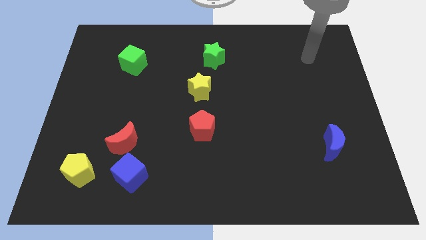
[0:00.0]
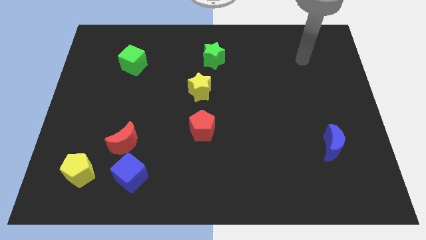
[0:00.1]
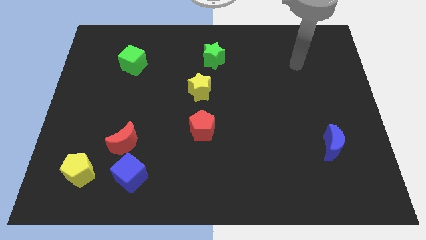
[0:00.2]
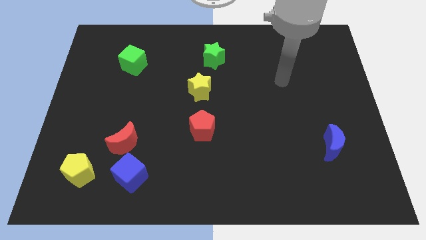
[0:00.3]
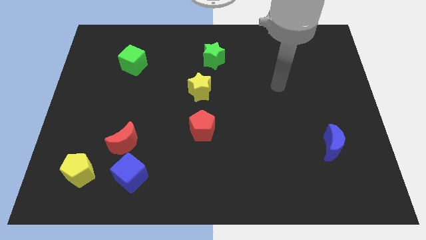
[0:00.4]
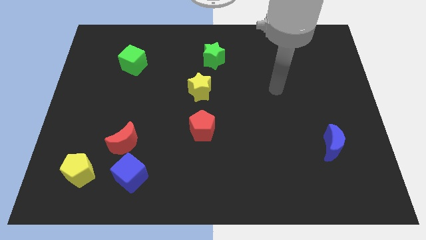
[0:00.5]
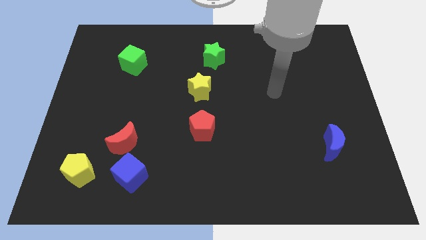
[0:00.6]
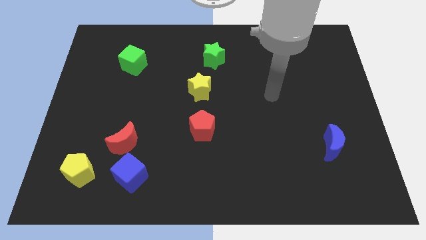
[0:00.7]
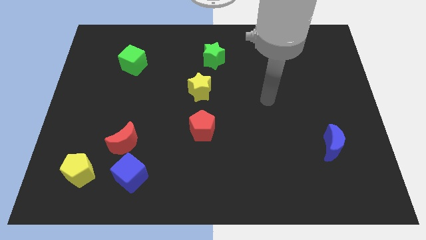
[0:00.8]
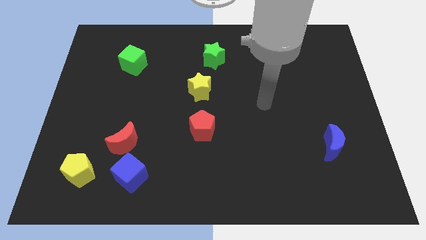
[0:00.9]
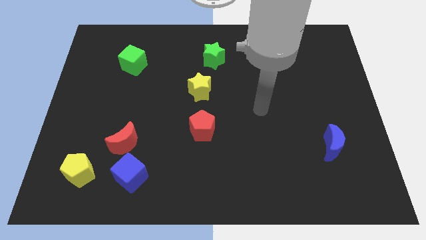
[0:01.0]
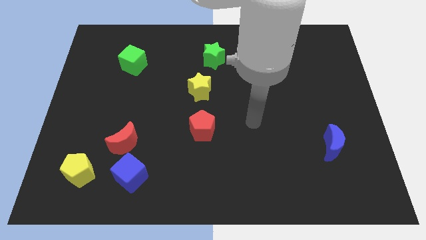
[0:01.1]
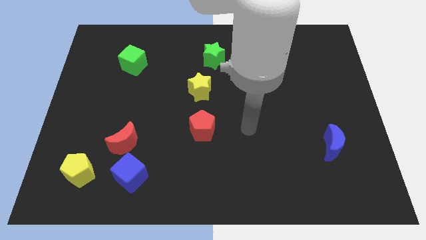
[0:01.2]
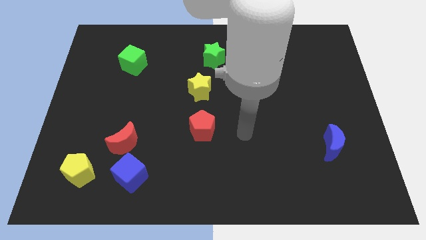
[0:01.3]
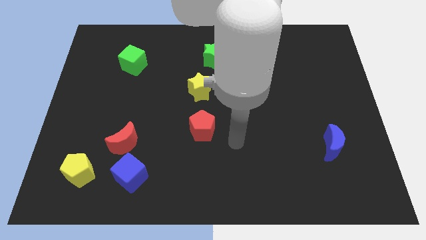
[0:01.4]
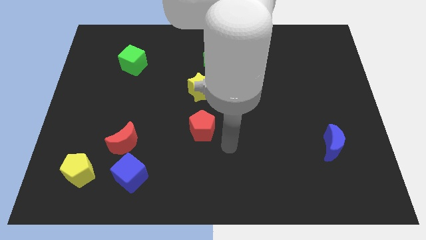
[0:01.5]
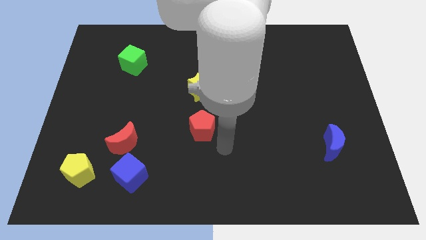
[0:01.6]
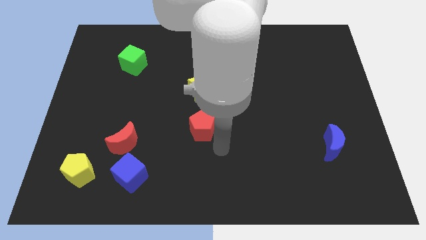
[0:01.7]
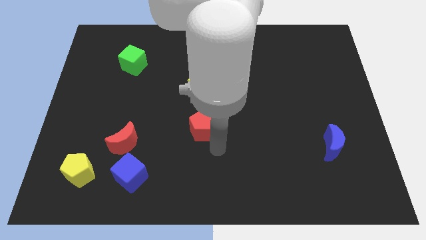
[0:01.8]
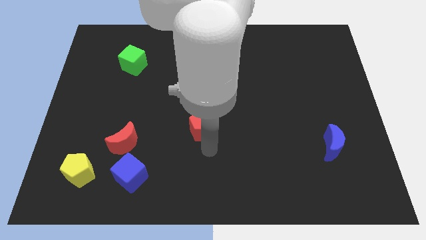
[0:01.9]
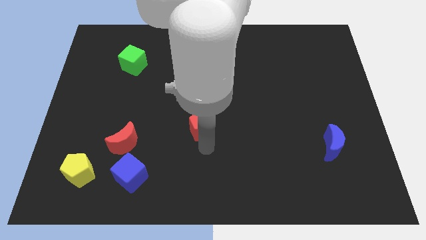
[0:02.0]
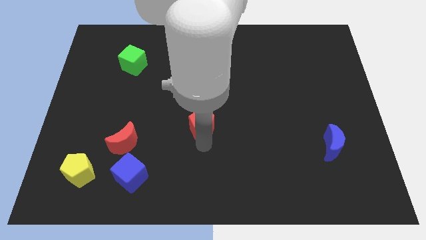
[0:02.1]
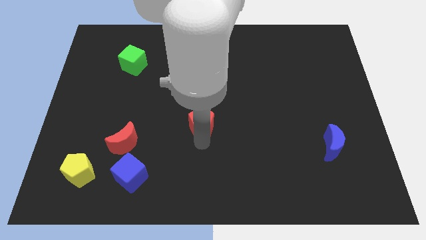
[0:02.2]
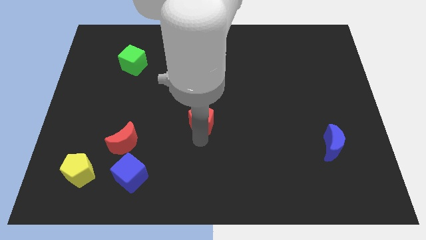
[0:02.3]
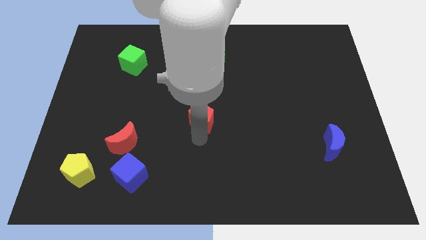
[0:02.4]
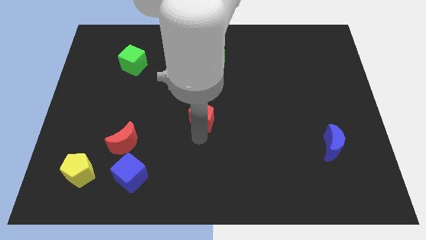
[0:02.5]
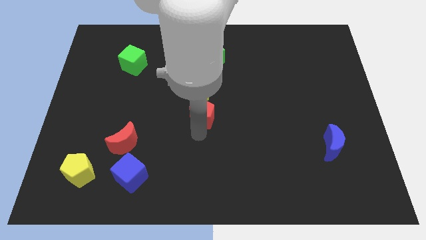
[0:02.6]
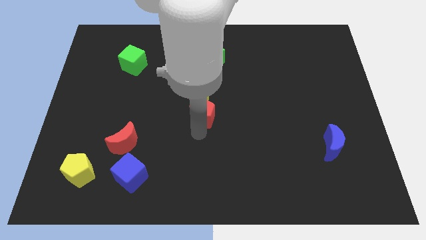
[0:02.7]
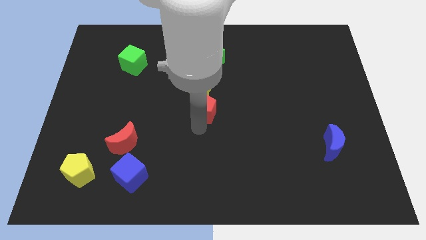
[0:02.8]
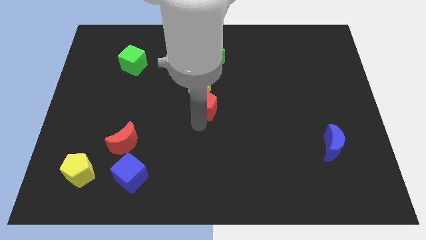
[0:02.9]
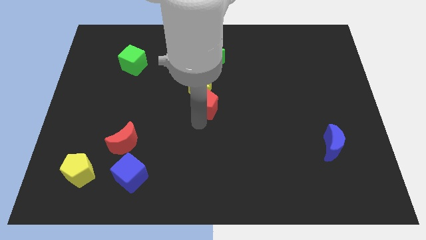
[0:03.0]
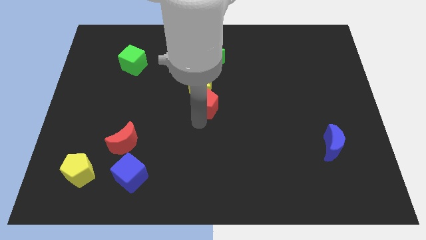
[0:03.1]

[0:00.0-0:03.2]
push the red pentagon next to the yellow star

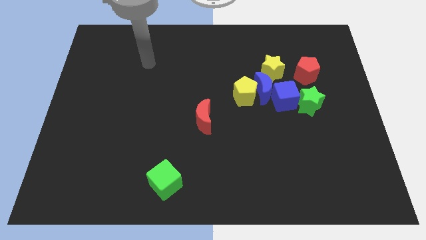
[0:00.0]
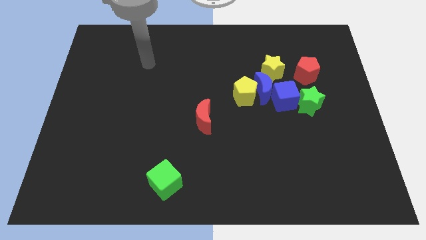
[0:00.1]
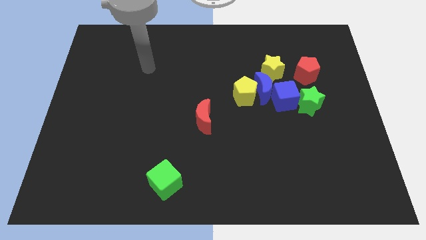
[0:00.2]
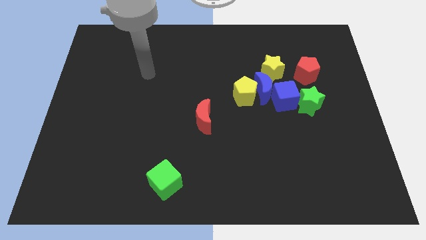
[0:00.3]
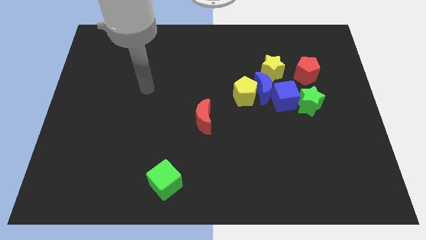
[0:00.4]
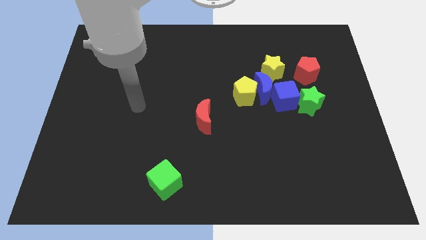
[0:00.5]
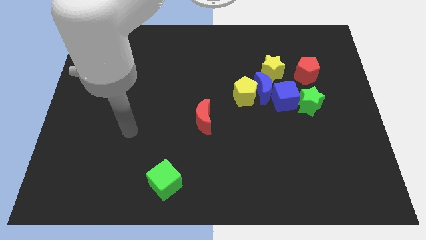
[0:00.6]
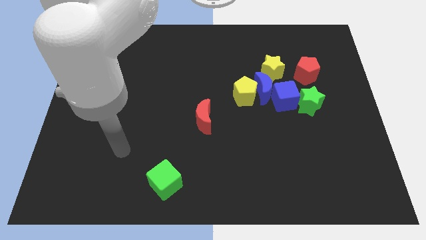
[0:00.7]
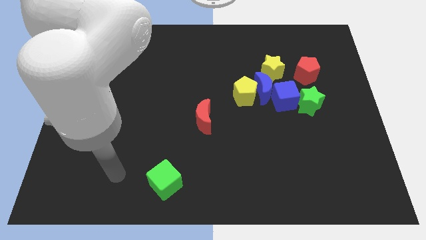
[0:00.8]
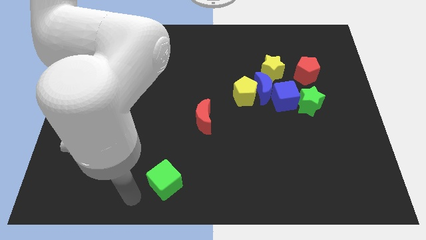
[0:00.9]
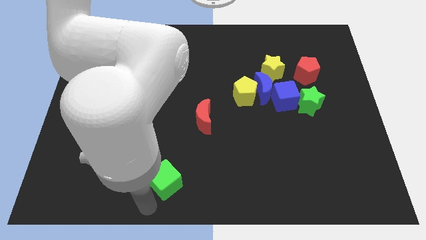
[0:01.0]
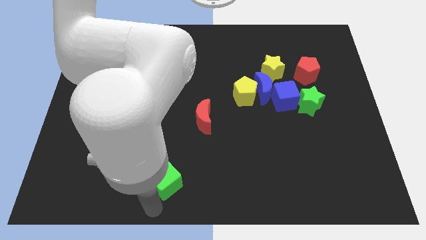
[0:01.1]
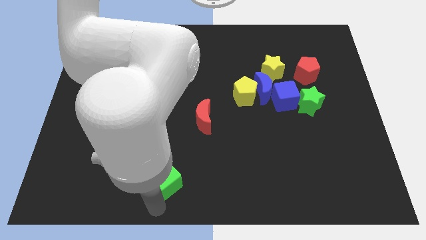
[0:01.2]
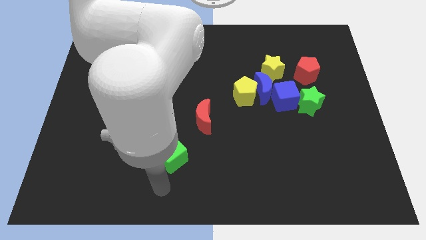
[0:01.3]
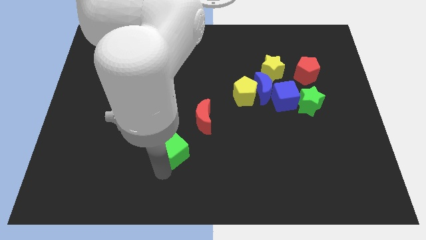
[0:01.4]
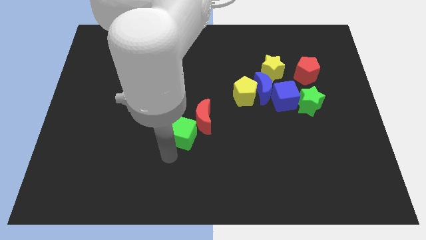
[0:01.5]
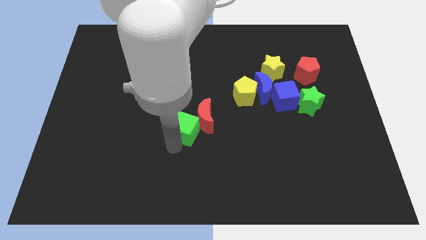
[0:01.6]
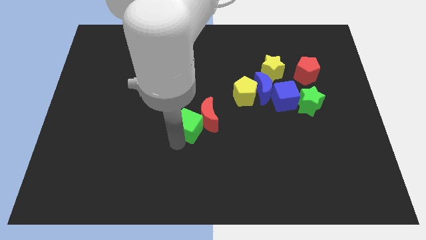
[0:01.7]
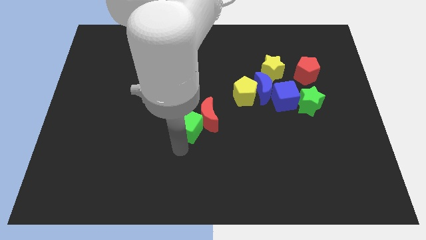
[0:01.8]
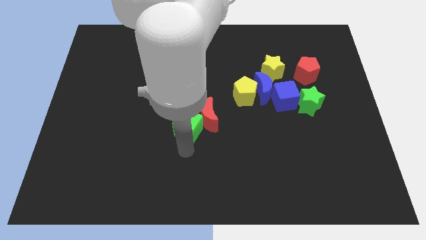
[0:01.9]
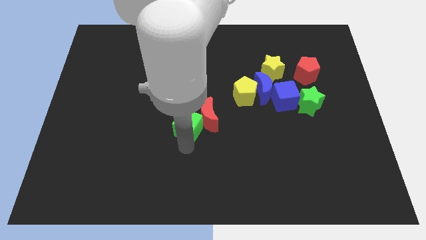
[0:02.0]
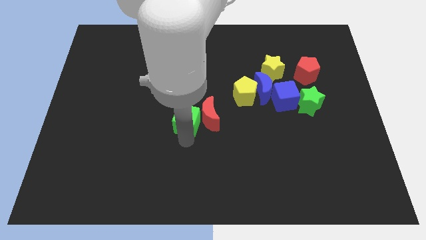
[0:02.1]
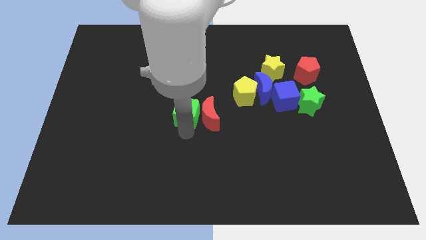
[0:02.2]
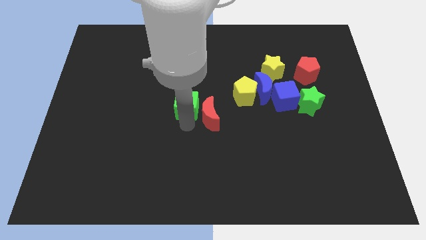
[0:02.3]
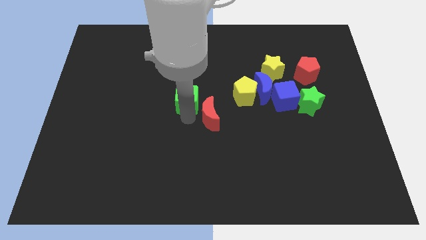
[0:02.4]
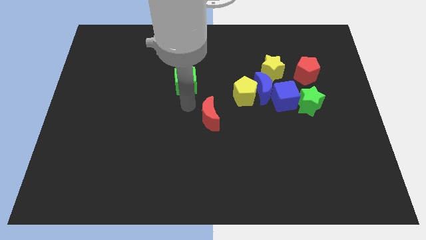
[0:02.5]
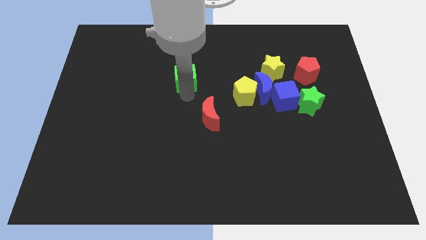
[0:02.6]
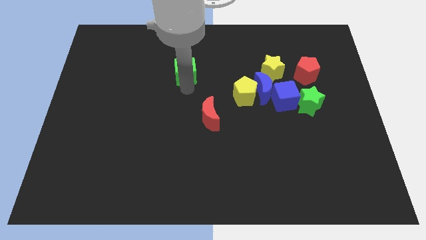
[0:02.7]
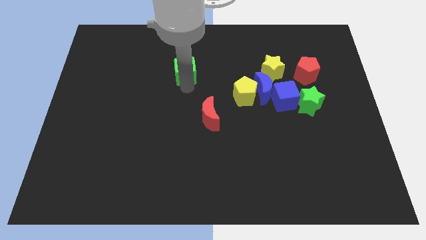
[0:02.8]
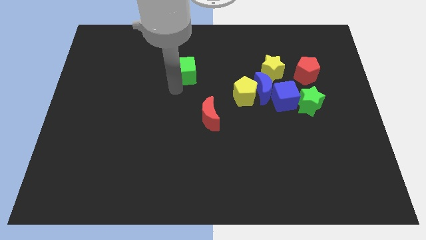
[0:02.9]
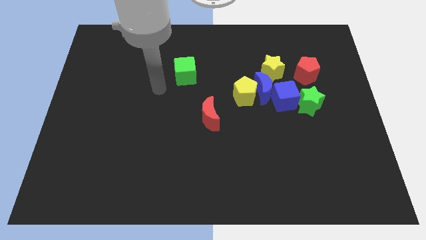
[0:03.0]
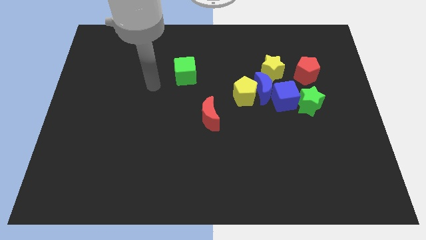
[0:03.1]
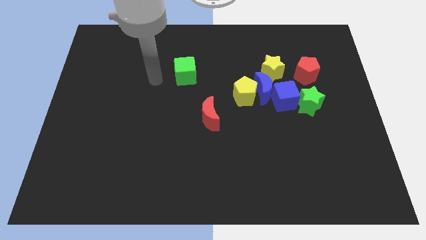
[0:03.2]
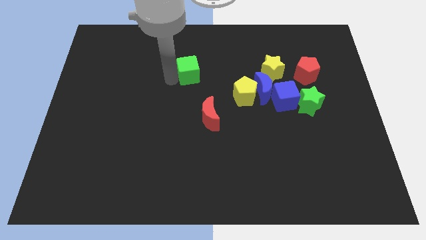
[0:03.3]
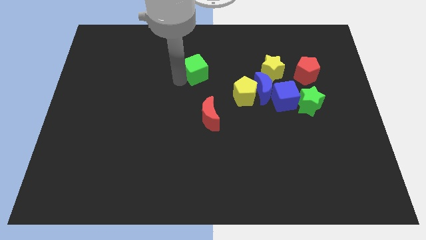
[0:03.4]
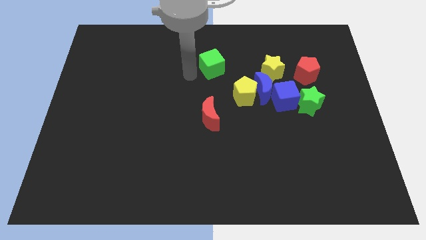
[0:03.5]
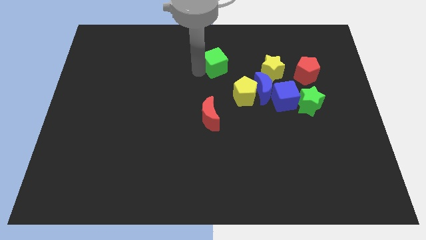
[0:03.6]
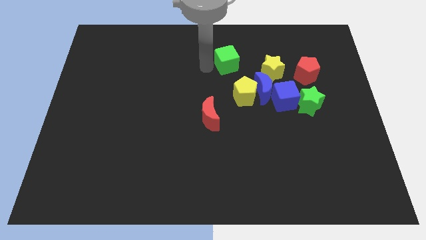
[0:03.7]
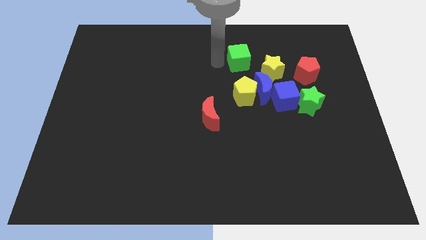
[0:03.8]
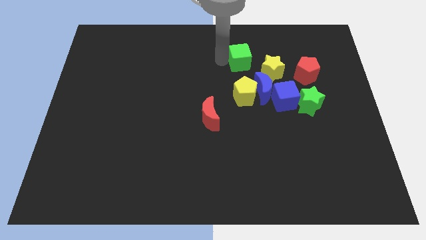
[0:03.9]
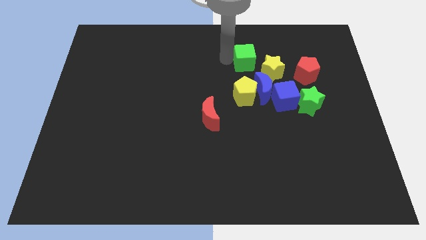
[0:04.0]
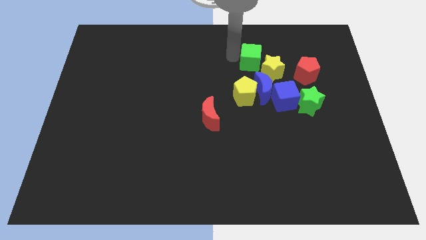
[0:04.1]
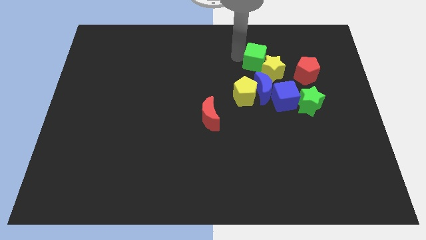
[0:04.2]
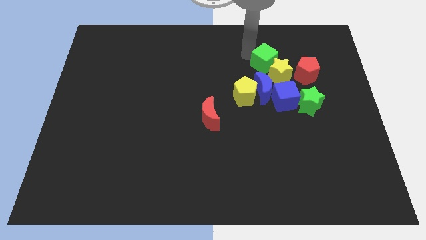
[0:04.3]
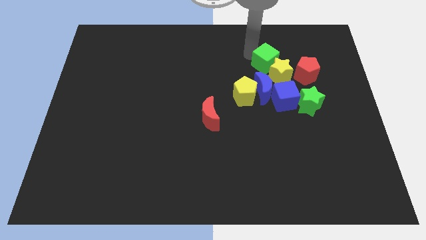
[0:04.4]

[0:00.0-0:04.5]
move the green cube close to the yellow star

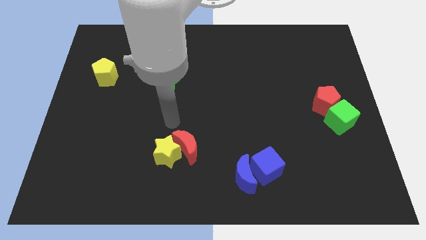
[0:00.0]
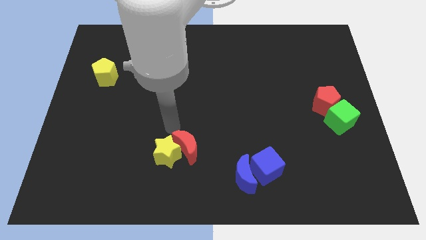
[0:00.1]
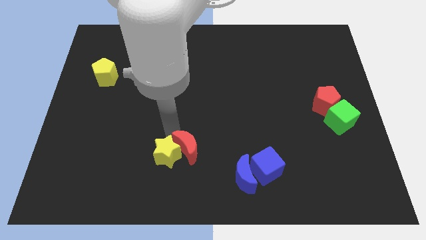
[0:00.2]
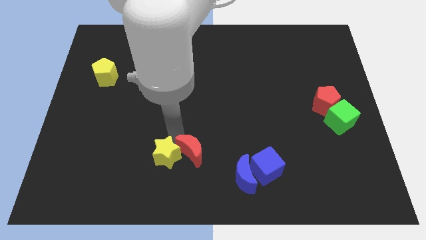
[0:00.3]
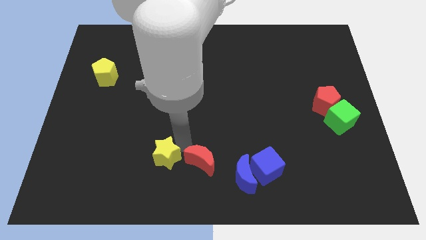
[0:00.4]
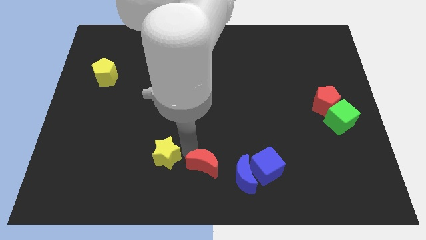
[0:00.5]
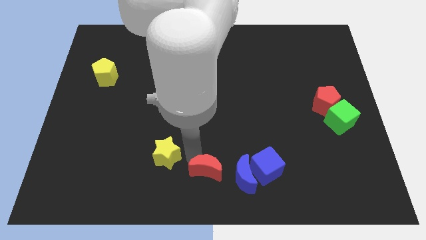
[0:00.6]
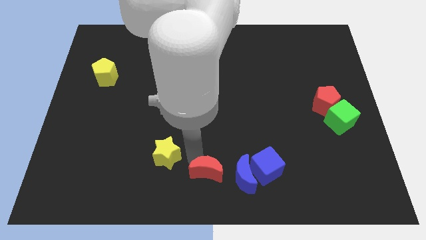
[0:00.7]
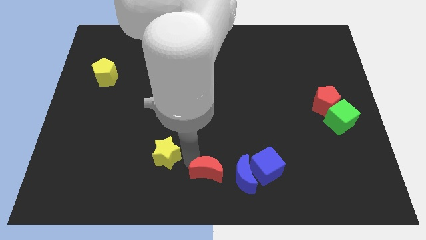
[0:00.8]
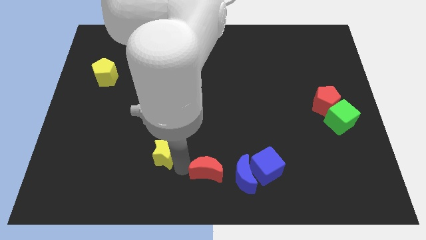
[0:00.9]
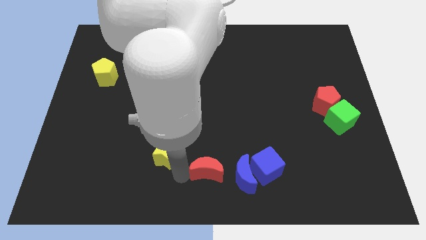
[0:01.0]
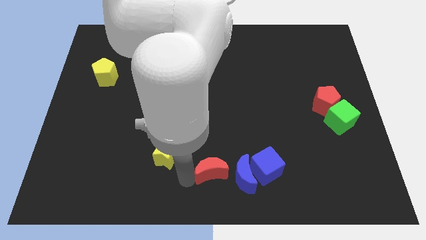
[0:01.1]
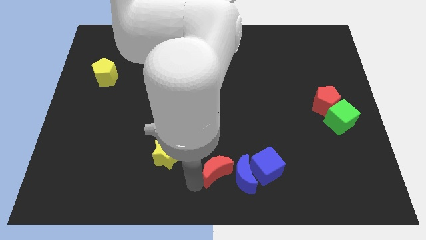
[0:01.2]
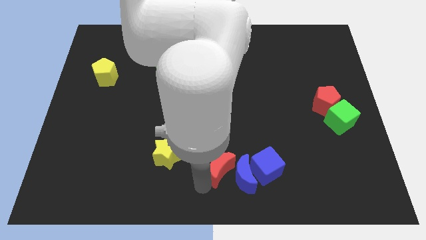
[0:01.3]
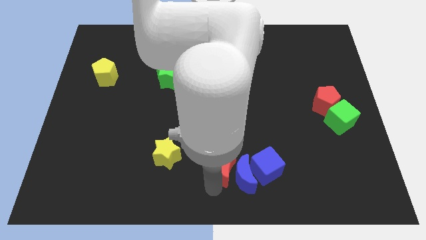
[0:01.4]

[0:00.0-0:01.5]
move the red moon next to the blue moon
